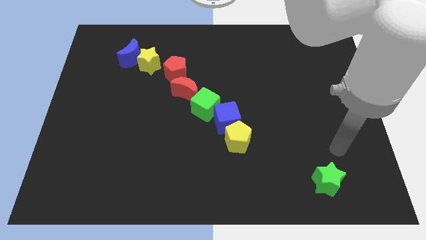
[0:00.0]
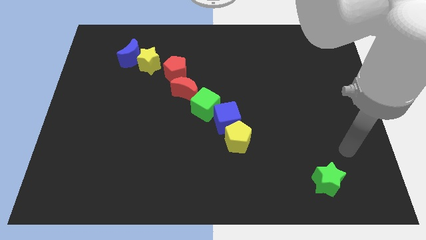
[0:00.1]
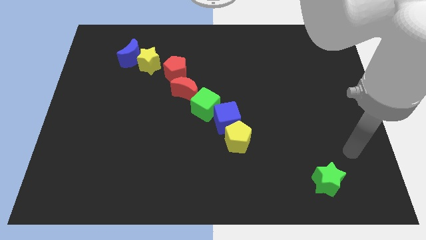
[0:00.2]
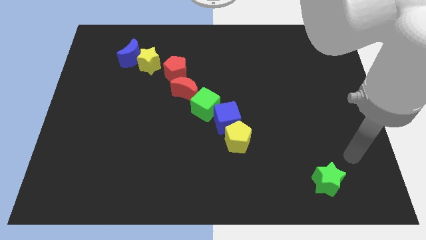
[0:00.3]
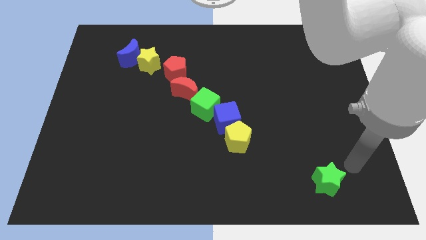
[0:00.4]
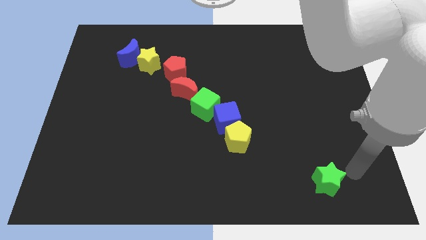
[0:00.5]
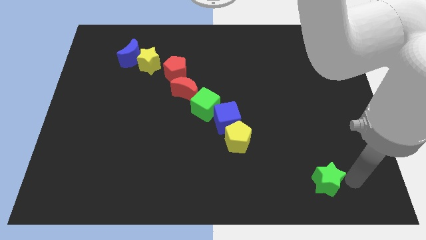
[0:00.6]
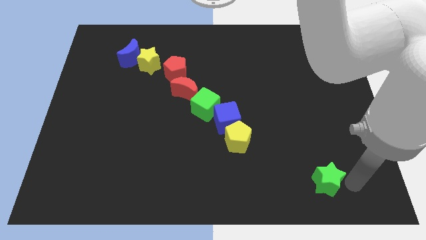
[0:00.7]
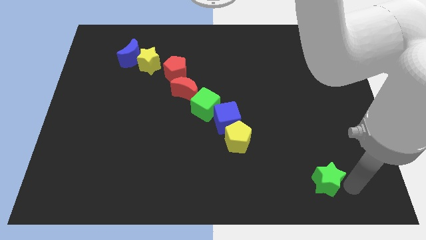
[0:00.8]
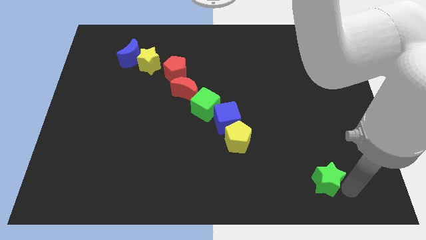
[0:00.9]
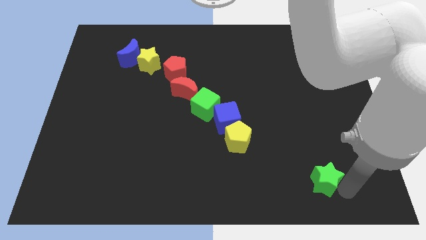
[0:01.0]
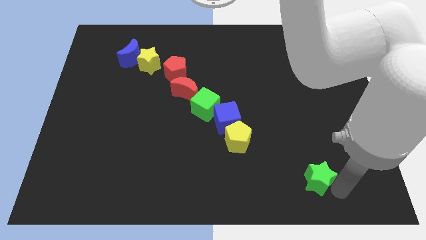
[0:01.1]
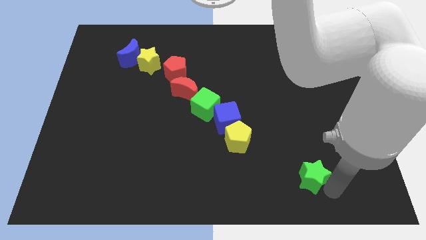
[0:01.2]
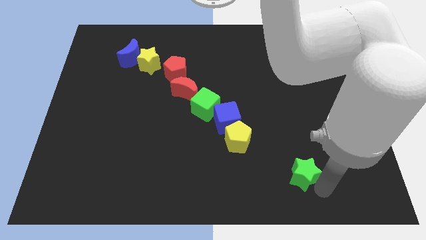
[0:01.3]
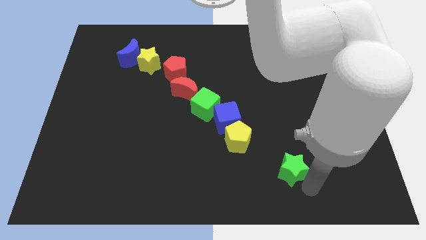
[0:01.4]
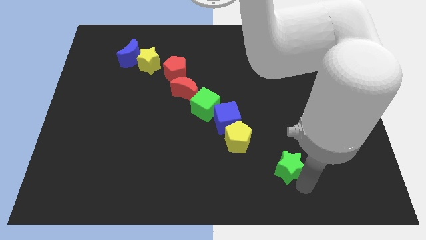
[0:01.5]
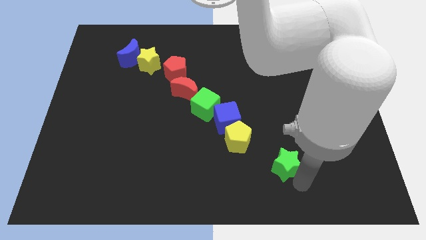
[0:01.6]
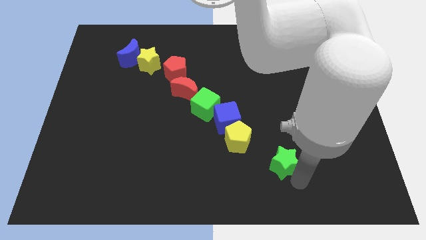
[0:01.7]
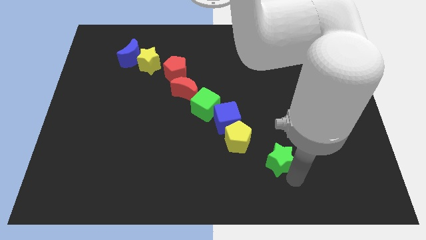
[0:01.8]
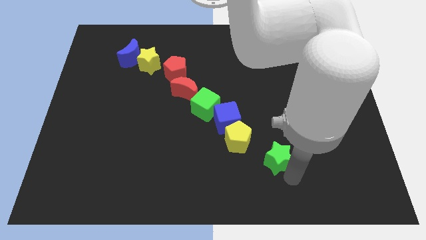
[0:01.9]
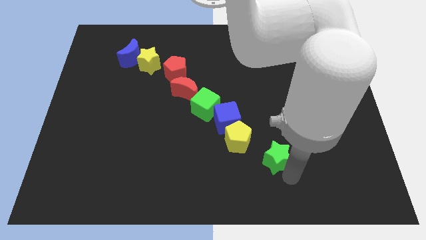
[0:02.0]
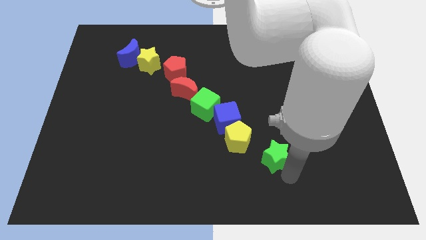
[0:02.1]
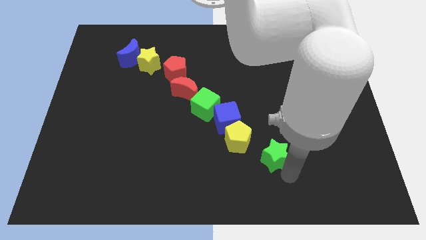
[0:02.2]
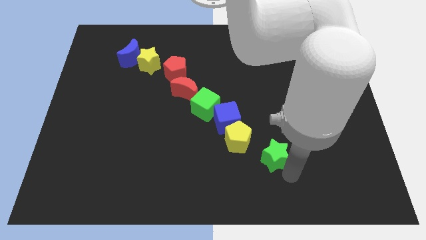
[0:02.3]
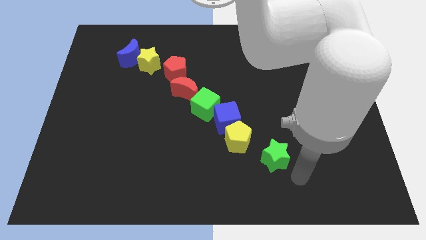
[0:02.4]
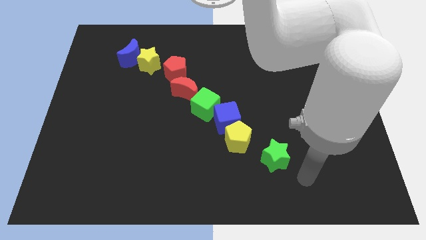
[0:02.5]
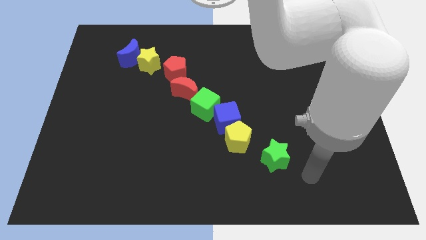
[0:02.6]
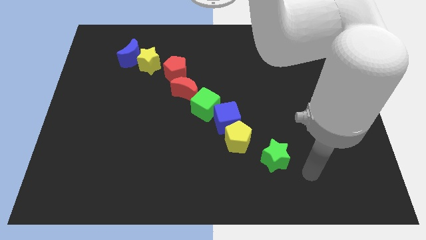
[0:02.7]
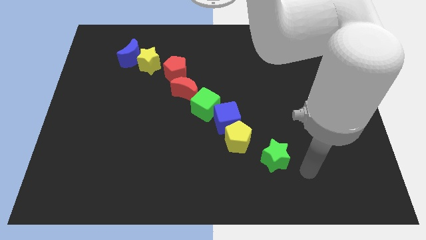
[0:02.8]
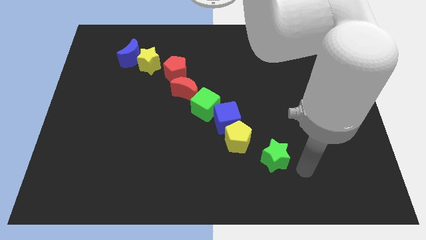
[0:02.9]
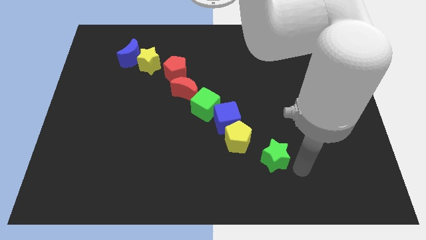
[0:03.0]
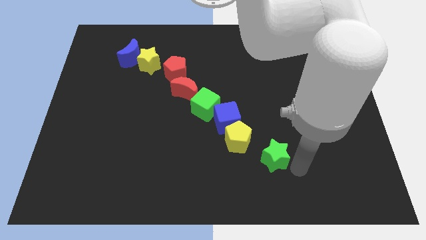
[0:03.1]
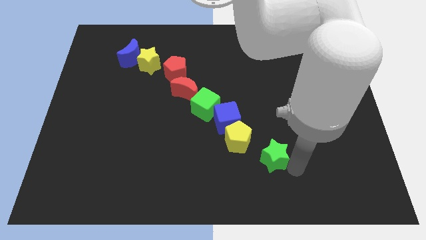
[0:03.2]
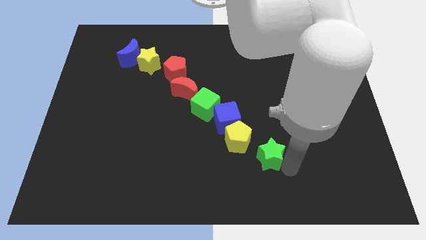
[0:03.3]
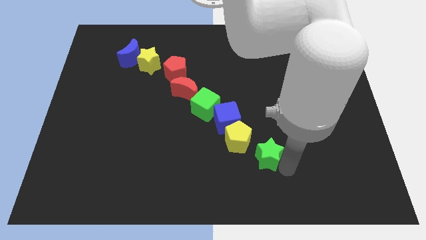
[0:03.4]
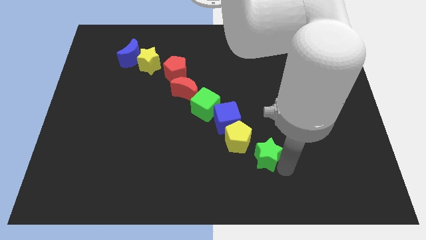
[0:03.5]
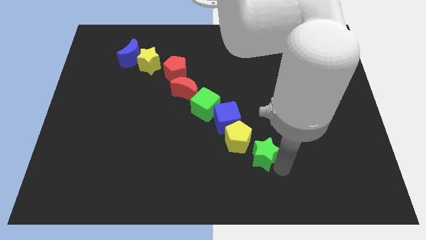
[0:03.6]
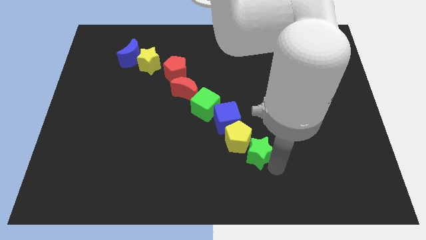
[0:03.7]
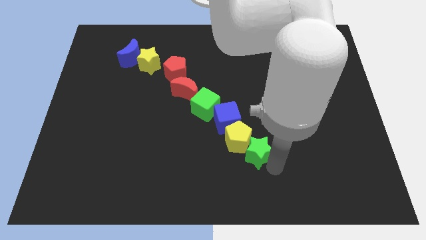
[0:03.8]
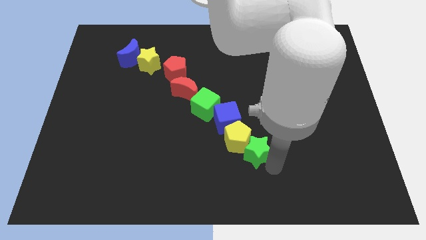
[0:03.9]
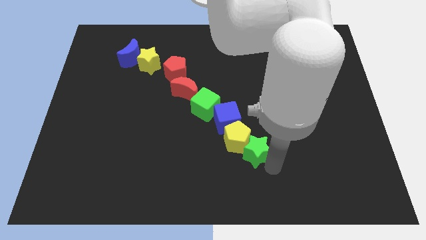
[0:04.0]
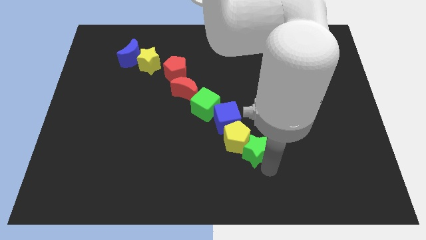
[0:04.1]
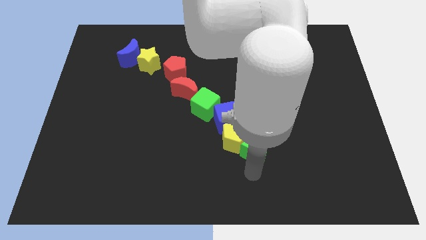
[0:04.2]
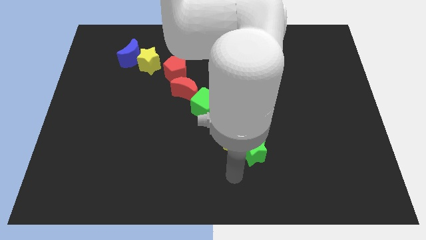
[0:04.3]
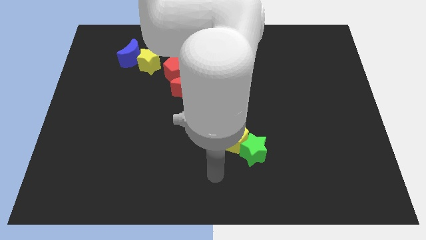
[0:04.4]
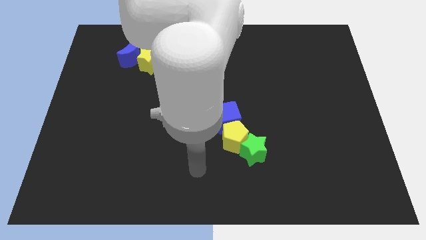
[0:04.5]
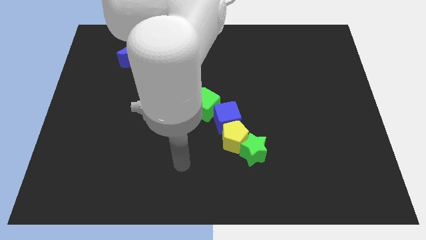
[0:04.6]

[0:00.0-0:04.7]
move the green star into the yellow pentagon

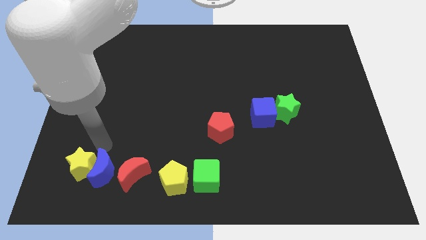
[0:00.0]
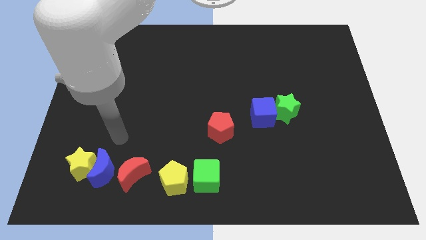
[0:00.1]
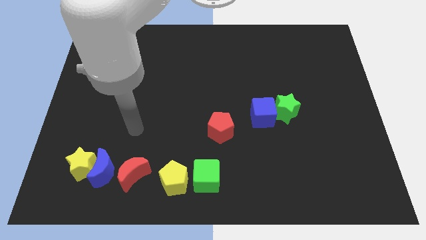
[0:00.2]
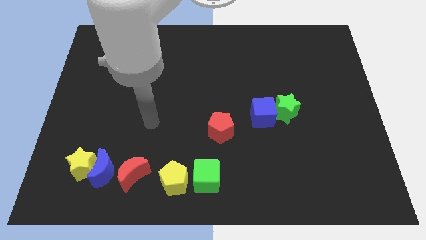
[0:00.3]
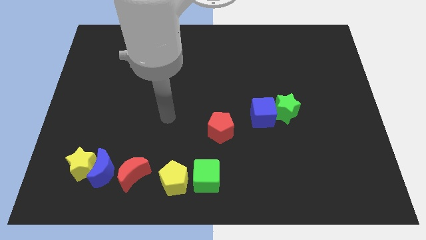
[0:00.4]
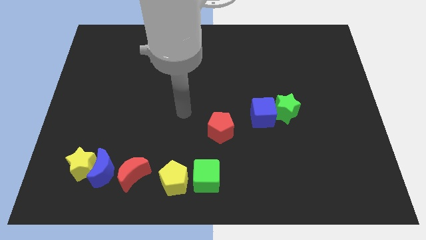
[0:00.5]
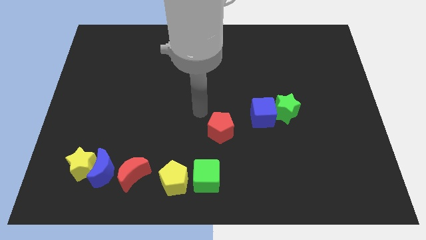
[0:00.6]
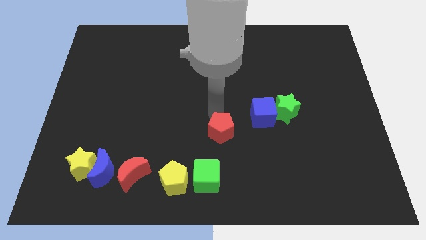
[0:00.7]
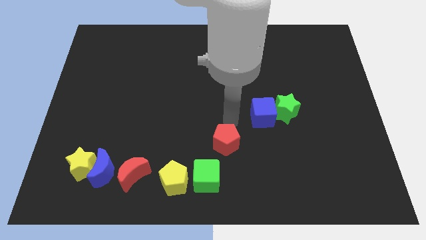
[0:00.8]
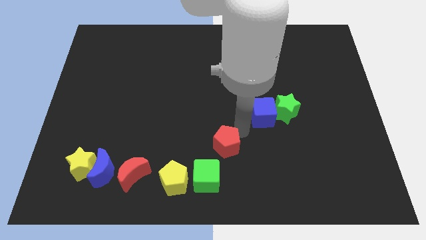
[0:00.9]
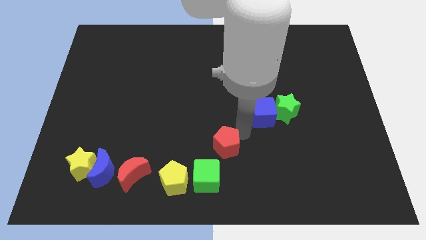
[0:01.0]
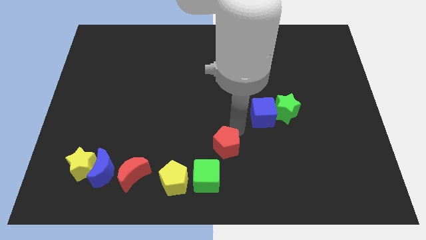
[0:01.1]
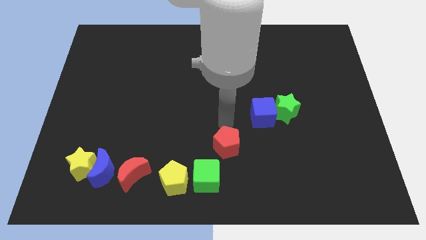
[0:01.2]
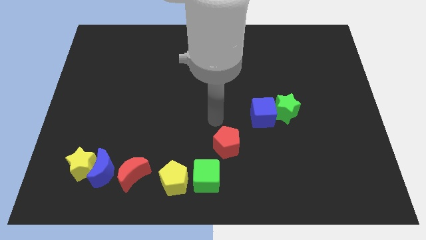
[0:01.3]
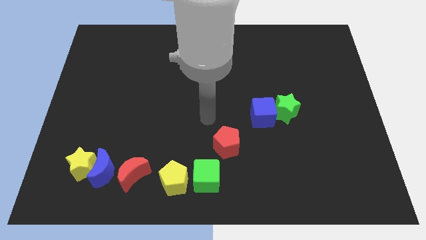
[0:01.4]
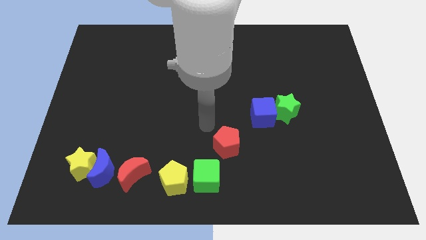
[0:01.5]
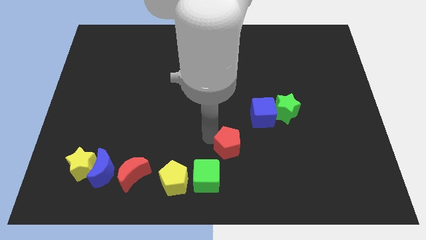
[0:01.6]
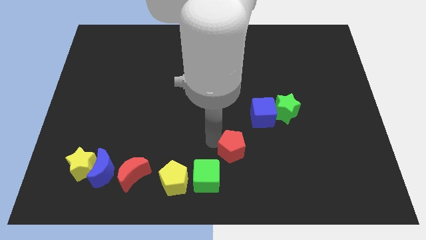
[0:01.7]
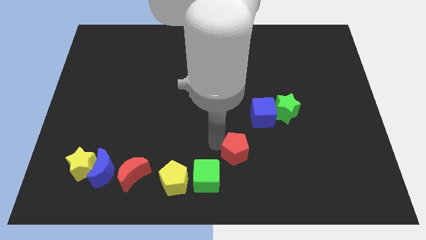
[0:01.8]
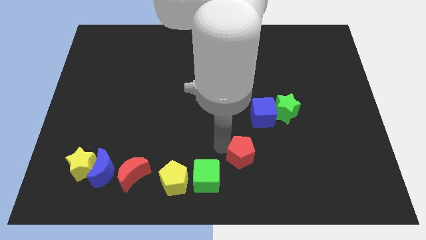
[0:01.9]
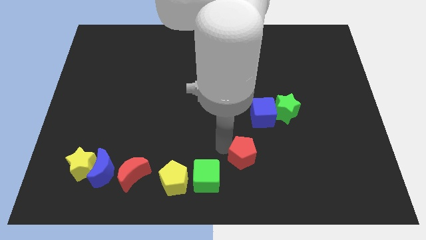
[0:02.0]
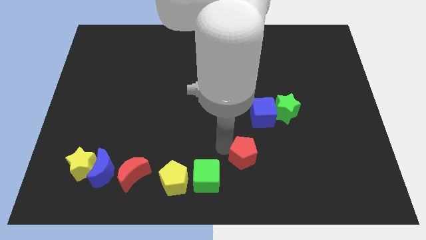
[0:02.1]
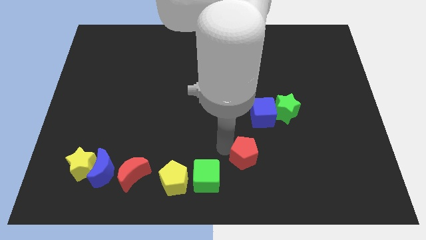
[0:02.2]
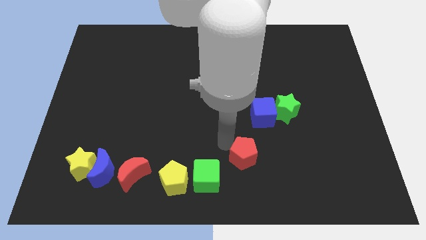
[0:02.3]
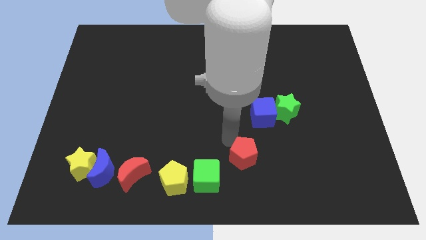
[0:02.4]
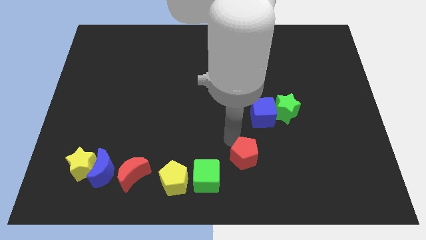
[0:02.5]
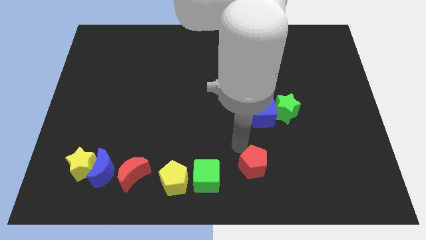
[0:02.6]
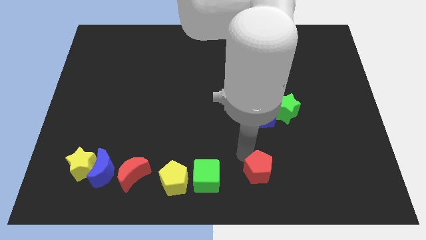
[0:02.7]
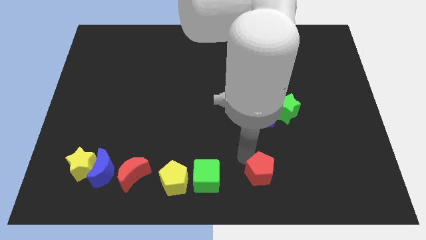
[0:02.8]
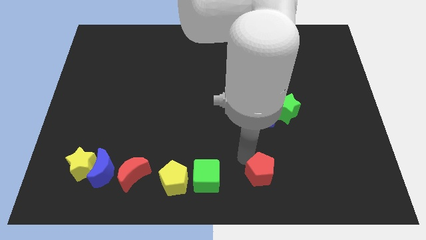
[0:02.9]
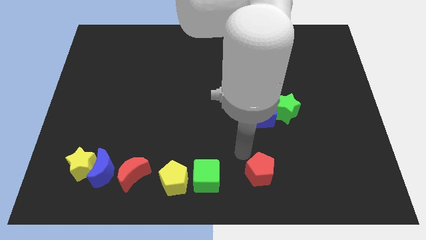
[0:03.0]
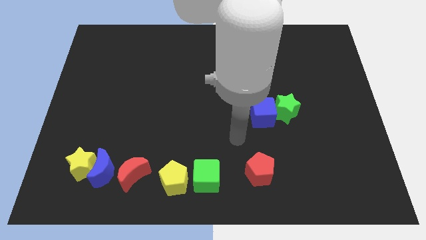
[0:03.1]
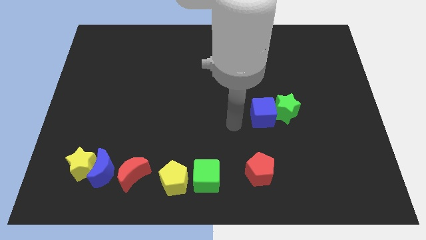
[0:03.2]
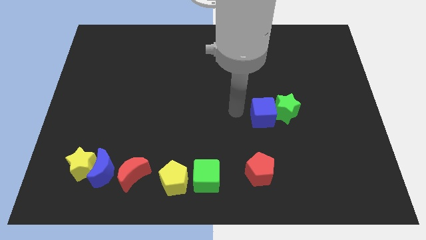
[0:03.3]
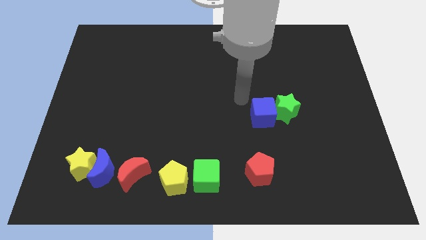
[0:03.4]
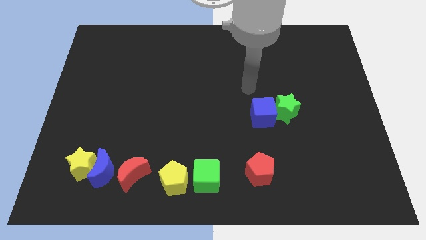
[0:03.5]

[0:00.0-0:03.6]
place red pentagon to the right of green cube

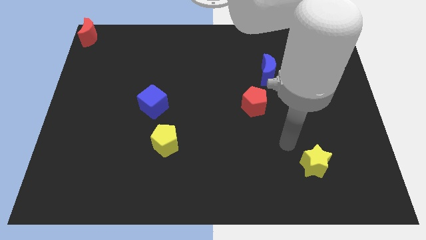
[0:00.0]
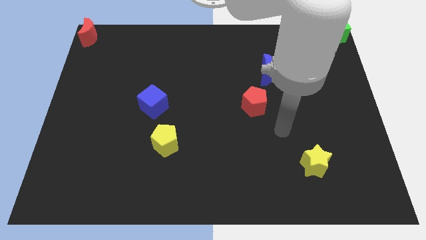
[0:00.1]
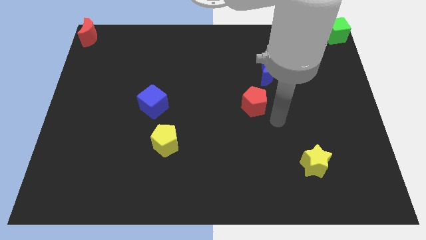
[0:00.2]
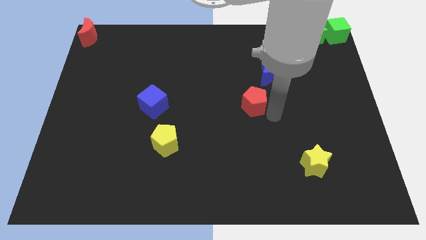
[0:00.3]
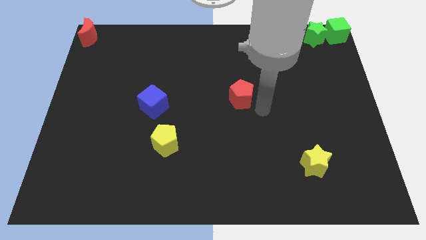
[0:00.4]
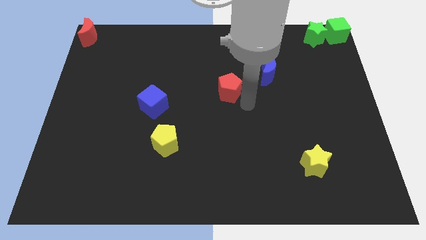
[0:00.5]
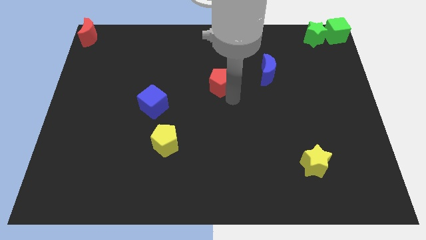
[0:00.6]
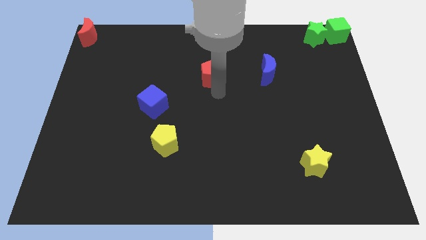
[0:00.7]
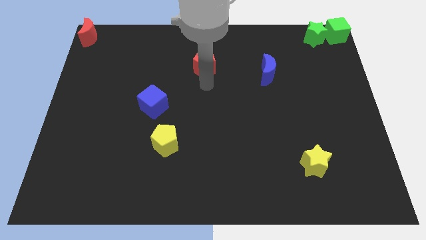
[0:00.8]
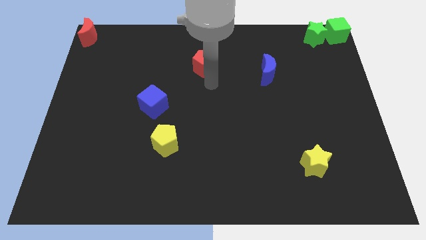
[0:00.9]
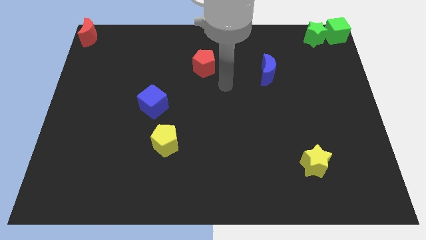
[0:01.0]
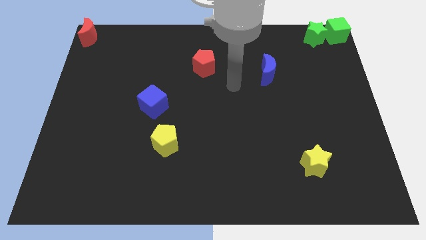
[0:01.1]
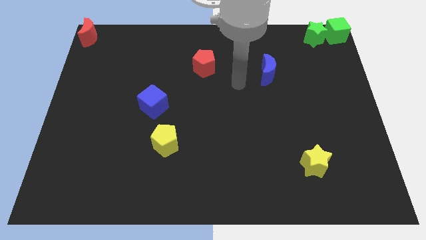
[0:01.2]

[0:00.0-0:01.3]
move the red pentagon diagonal to the left of the blue crescent
